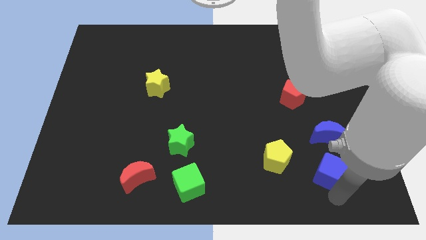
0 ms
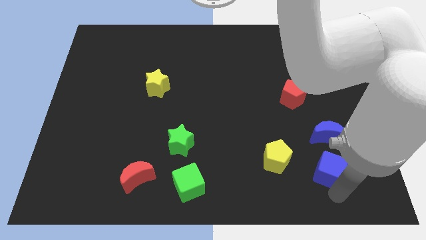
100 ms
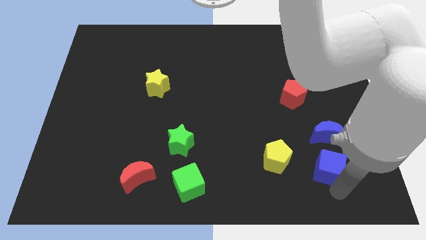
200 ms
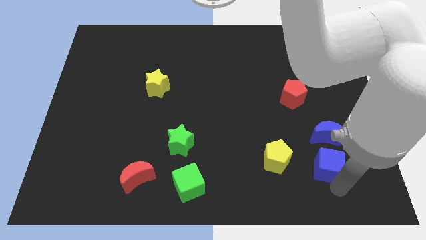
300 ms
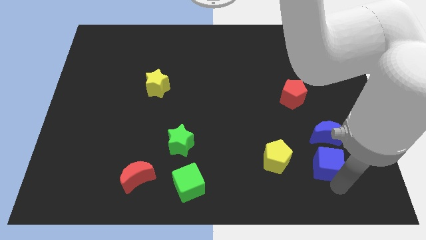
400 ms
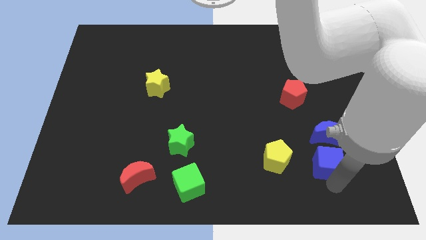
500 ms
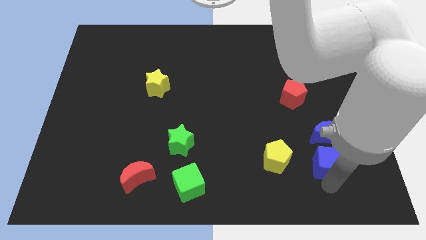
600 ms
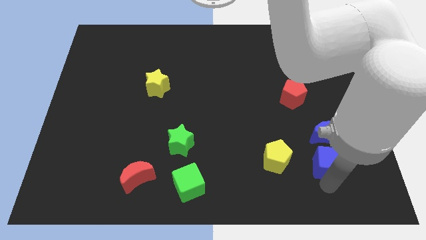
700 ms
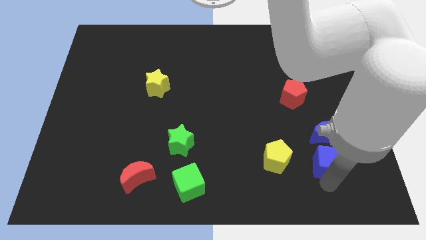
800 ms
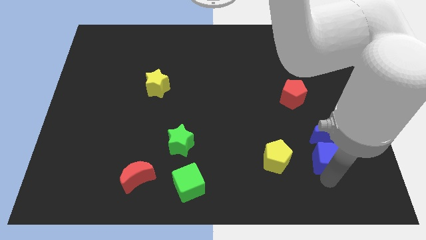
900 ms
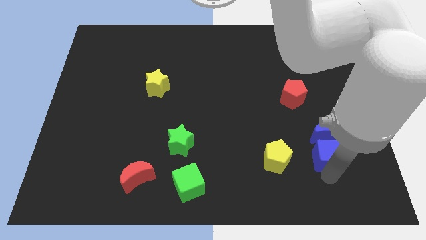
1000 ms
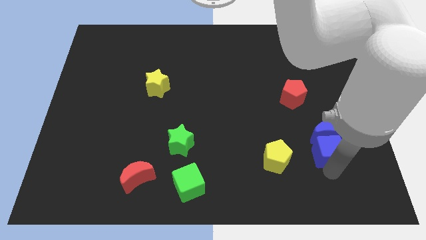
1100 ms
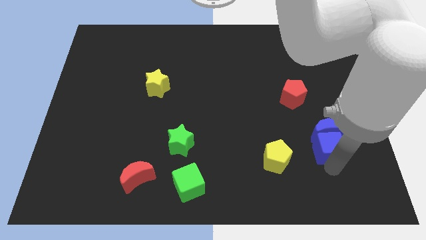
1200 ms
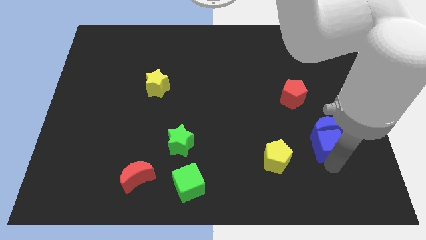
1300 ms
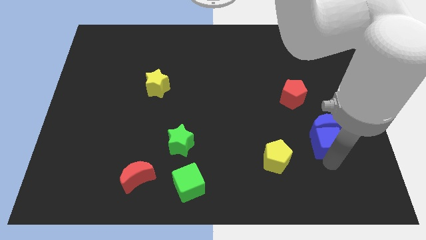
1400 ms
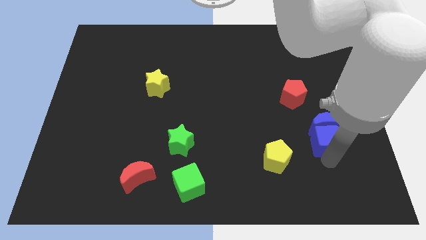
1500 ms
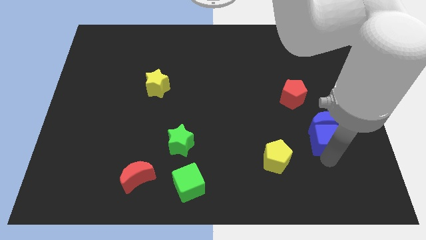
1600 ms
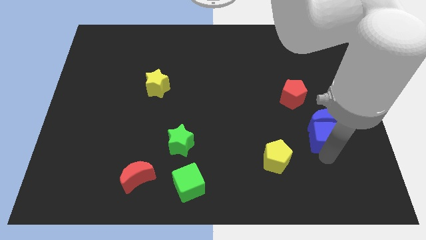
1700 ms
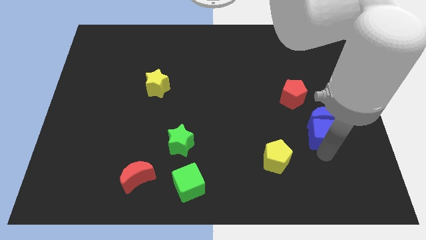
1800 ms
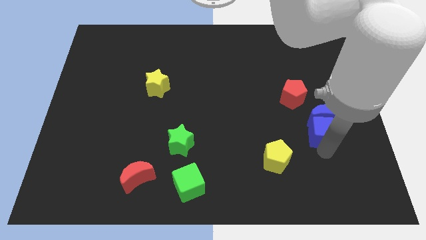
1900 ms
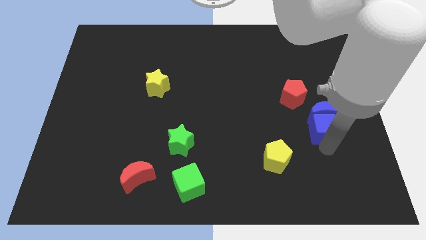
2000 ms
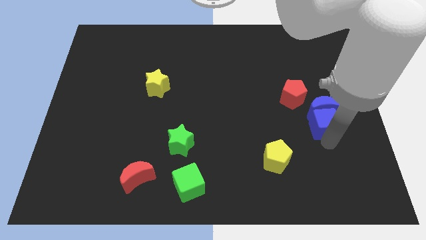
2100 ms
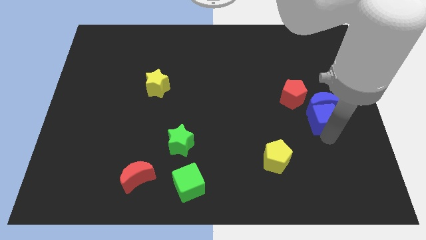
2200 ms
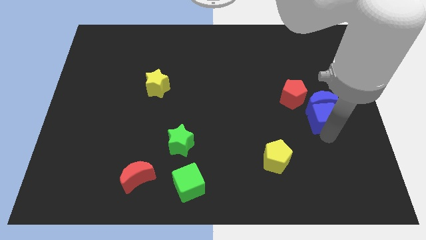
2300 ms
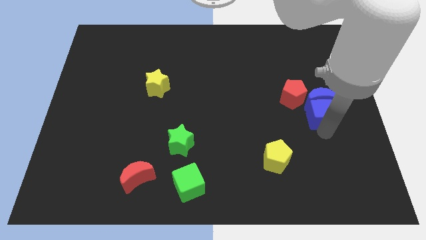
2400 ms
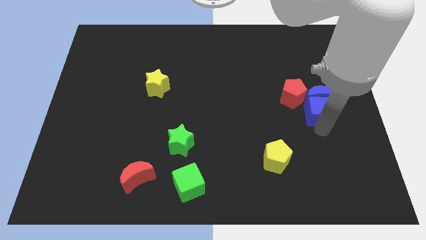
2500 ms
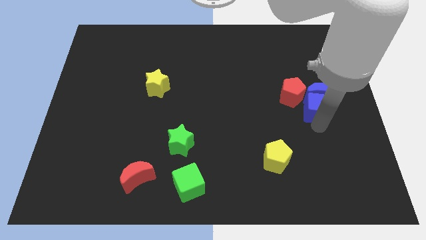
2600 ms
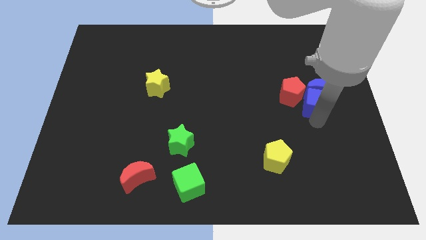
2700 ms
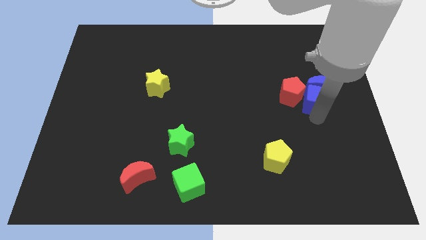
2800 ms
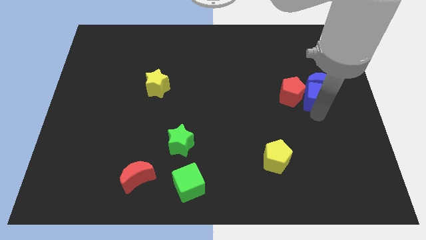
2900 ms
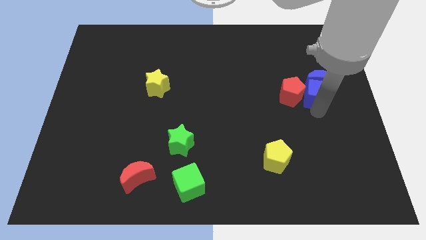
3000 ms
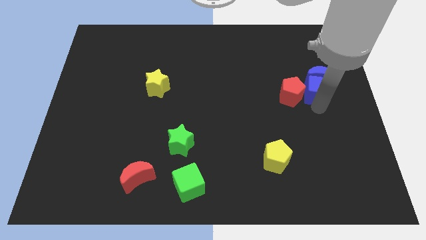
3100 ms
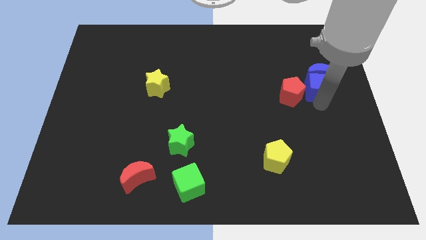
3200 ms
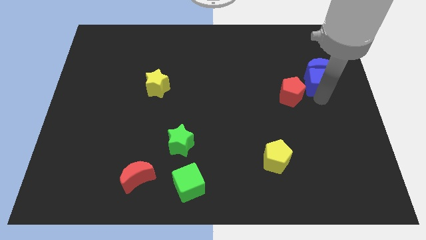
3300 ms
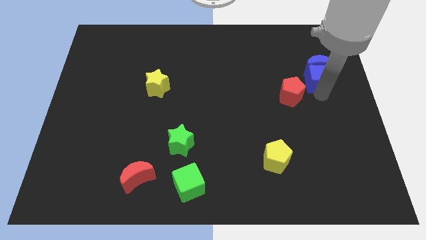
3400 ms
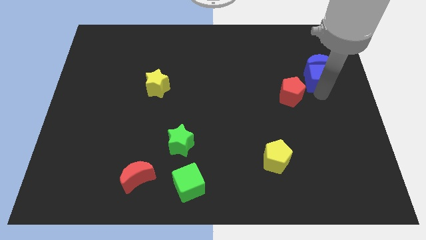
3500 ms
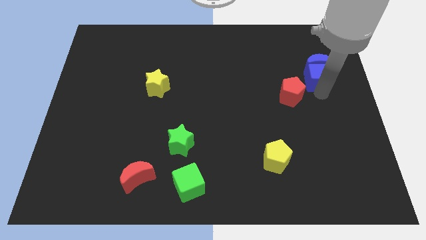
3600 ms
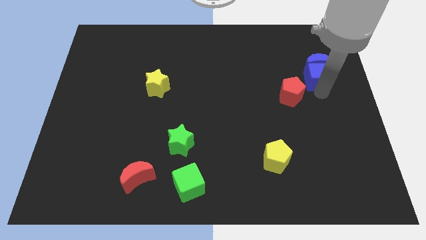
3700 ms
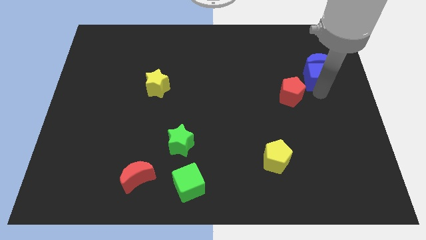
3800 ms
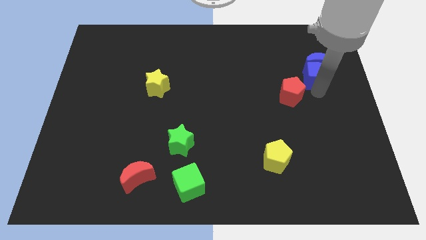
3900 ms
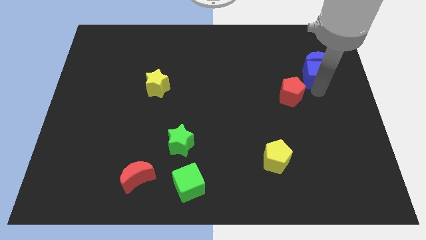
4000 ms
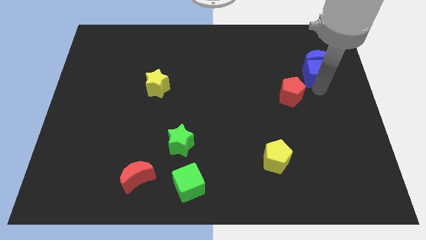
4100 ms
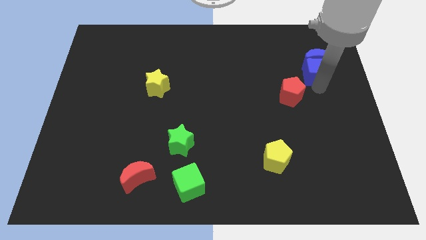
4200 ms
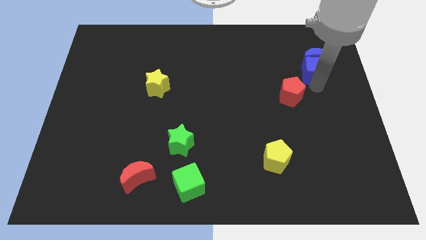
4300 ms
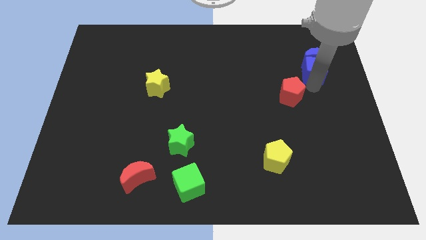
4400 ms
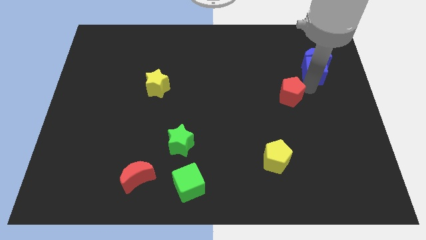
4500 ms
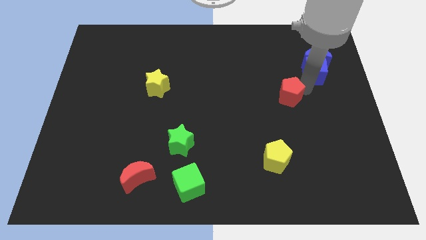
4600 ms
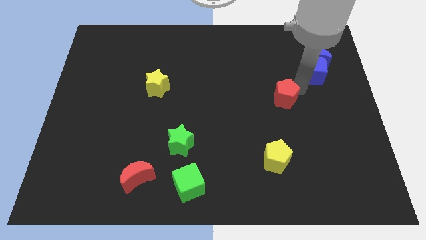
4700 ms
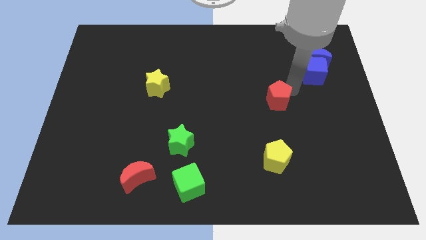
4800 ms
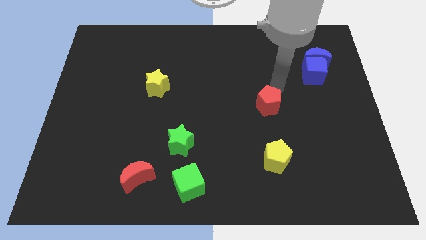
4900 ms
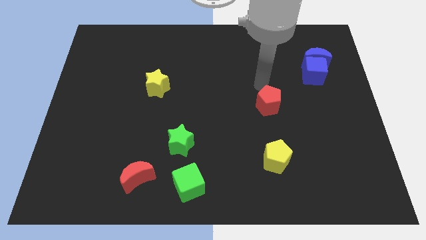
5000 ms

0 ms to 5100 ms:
push the blue cube into the blue moon towards the top right

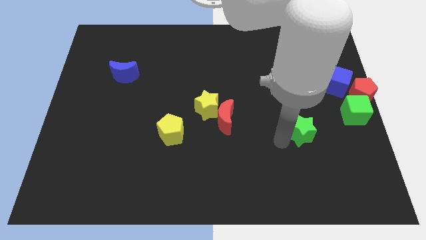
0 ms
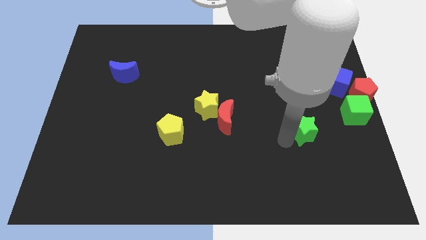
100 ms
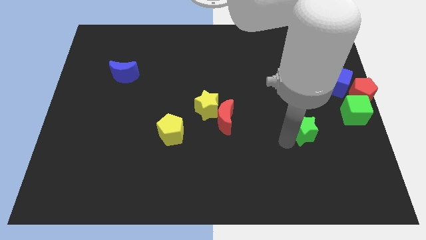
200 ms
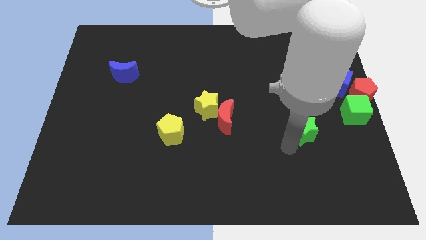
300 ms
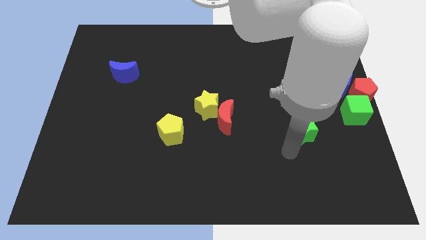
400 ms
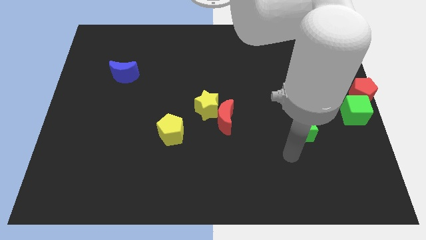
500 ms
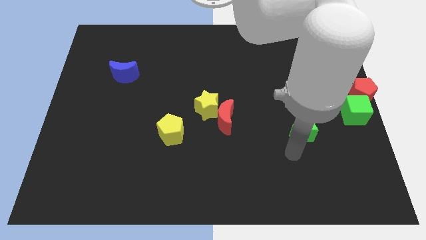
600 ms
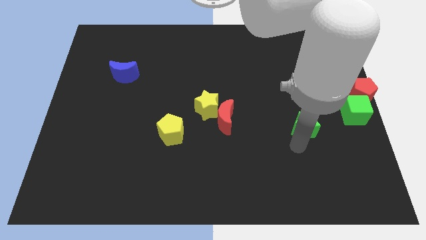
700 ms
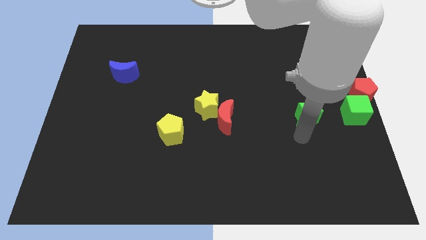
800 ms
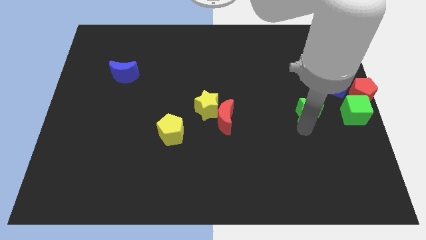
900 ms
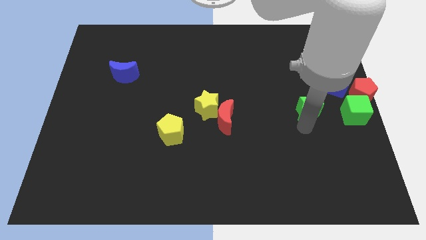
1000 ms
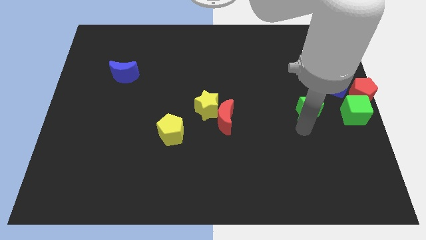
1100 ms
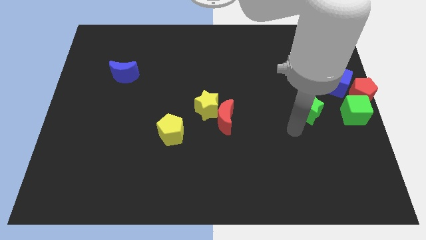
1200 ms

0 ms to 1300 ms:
move green star to the left of green cube

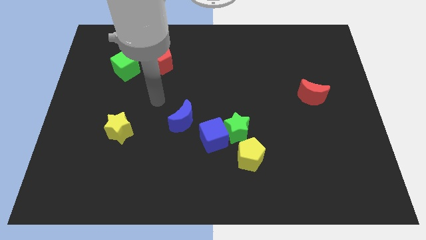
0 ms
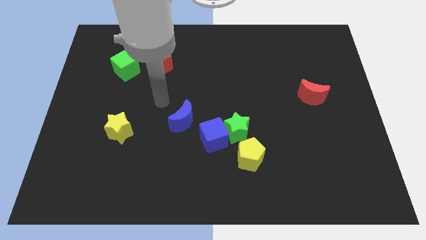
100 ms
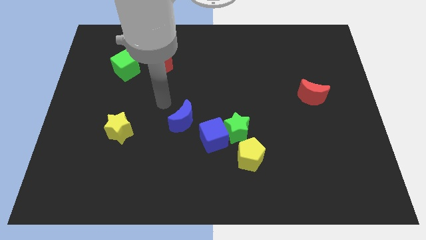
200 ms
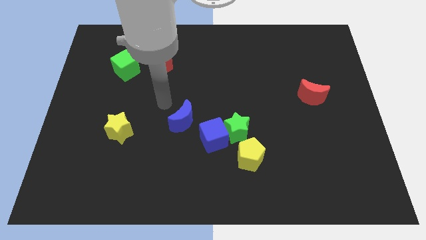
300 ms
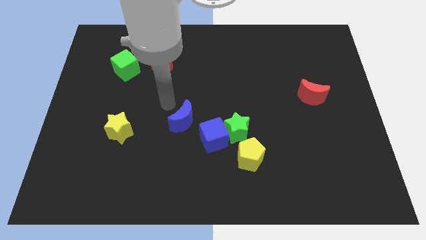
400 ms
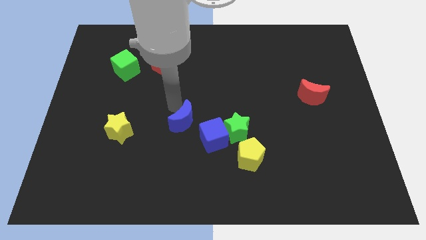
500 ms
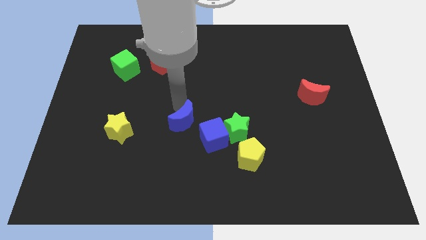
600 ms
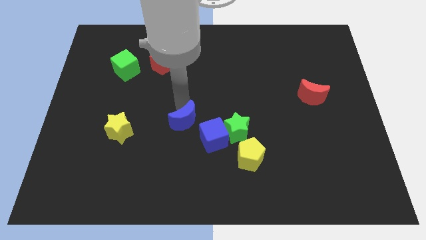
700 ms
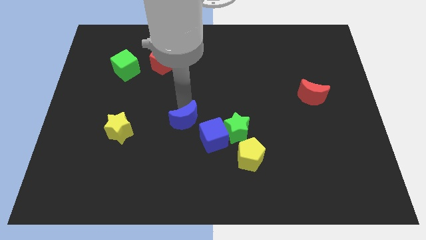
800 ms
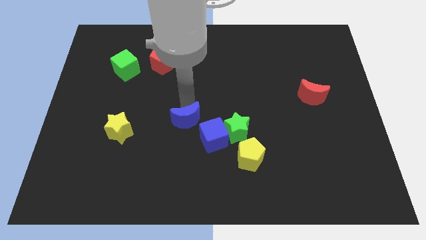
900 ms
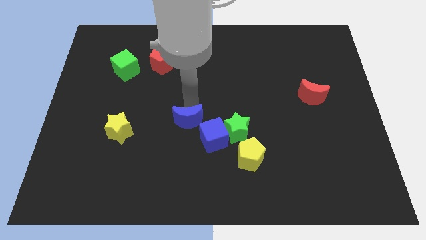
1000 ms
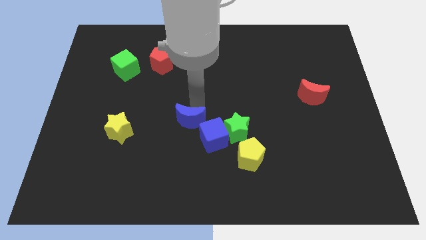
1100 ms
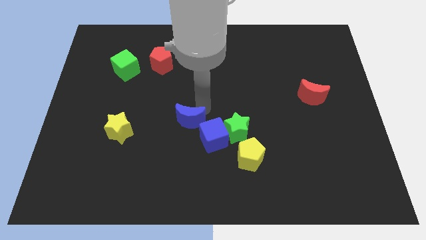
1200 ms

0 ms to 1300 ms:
push the blue crescent slightly to the right

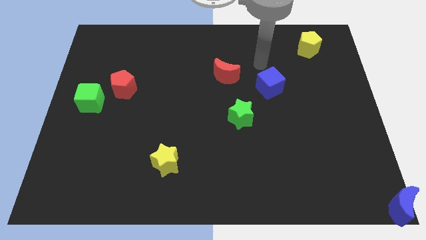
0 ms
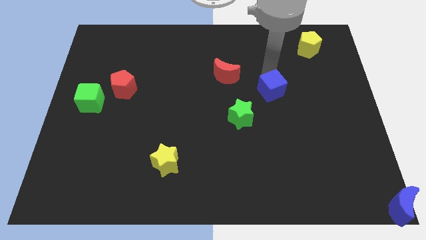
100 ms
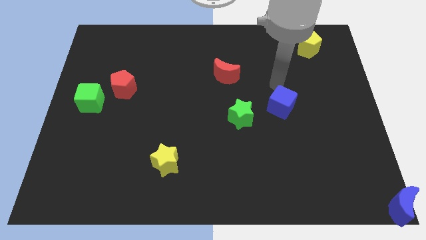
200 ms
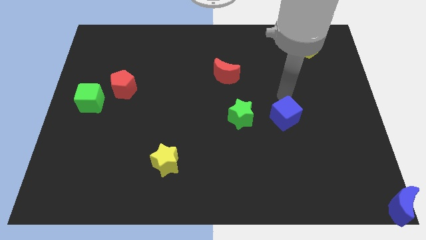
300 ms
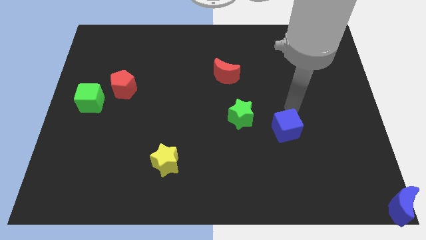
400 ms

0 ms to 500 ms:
push the blue cube to the bottom of the board

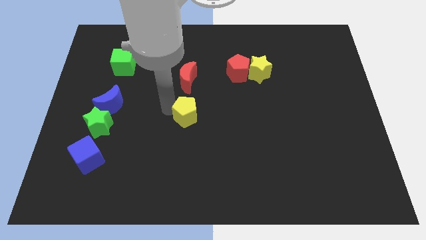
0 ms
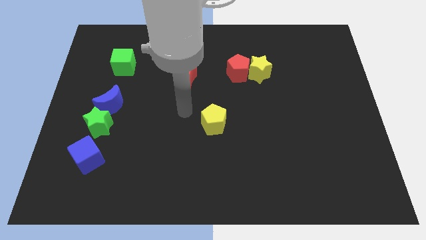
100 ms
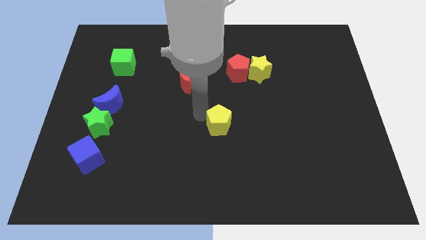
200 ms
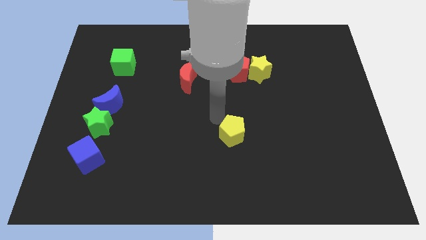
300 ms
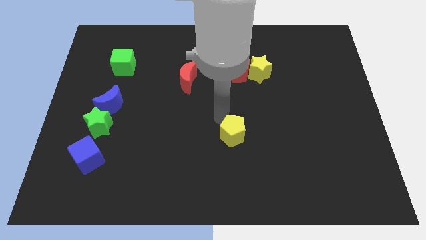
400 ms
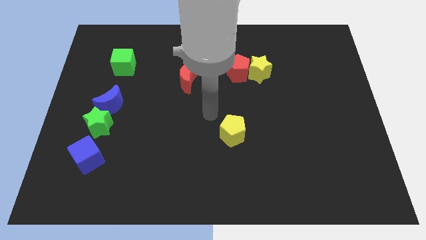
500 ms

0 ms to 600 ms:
place yellow pentagon below red pentagon

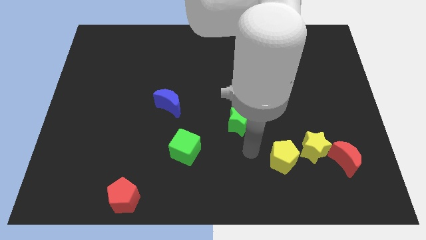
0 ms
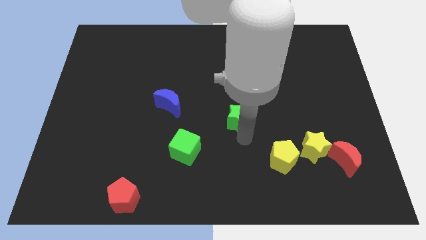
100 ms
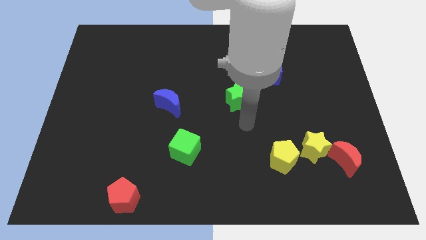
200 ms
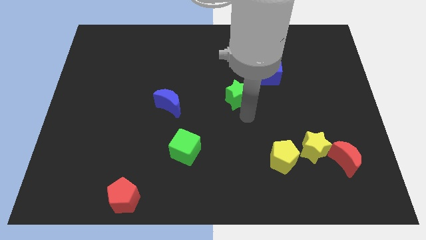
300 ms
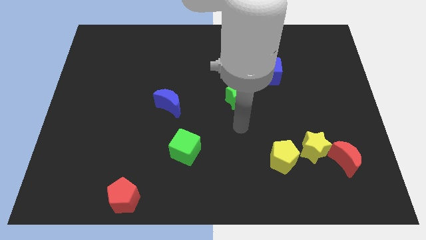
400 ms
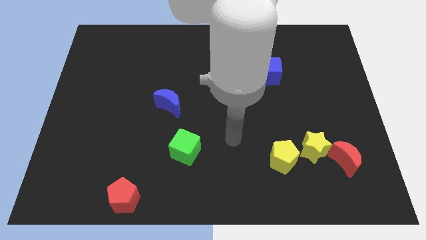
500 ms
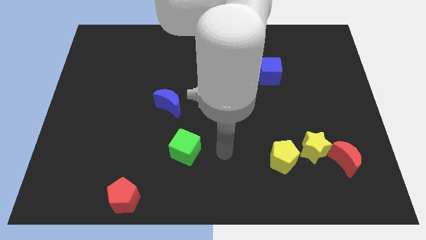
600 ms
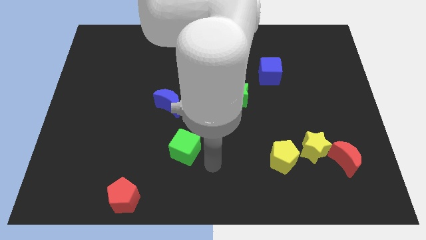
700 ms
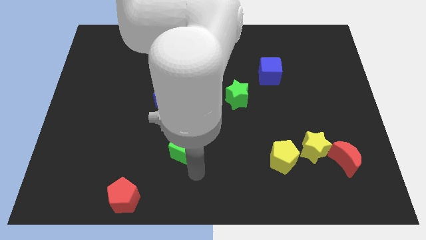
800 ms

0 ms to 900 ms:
slightly push the green star towards the blue cube
